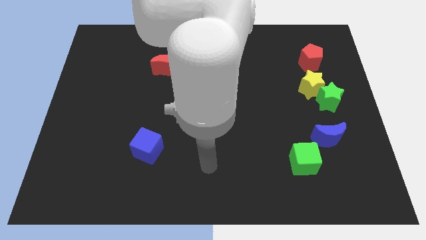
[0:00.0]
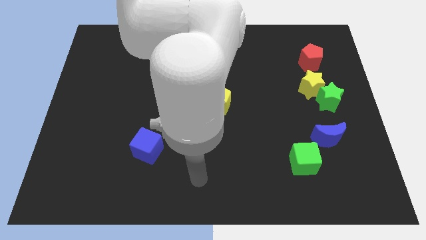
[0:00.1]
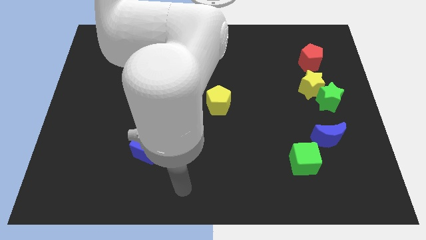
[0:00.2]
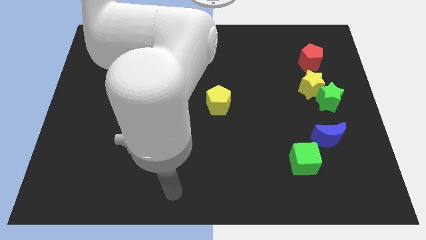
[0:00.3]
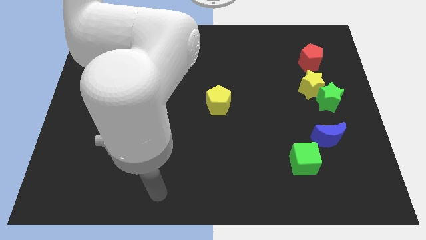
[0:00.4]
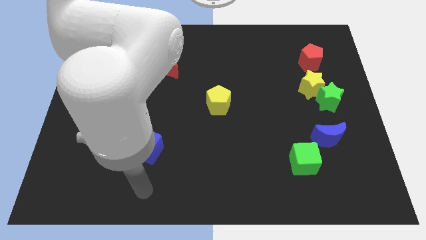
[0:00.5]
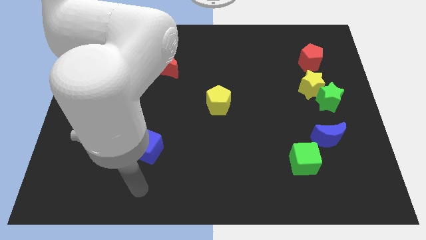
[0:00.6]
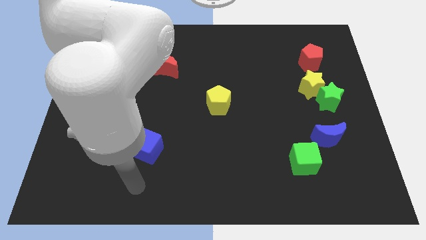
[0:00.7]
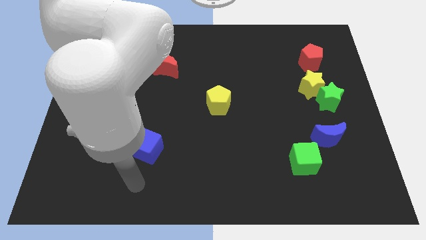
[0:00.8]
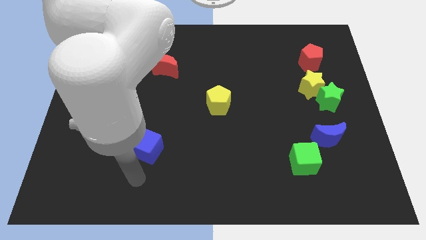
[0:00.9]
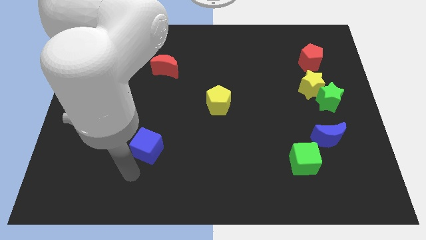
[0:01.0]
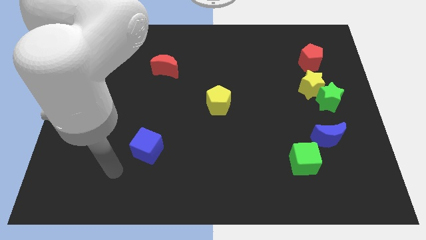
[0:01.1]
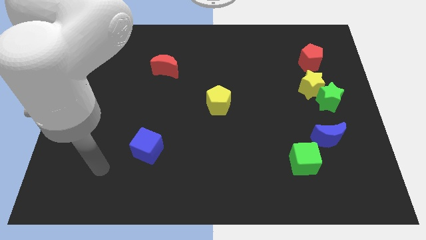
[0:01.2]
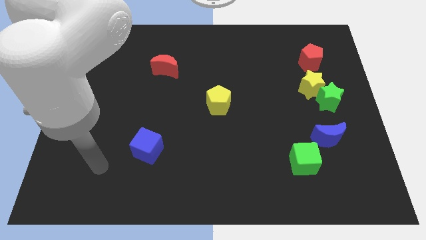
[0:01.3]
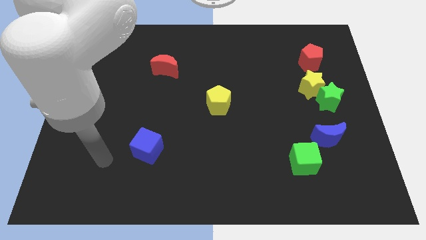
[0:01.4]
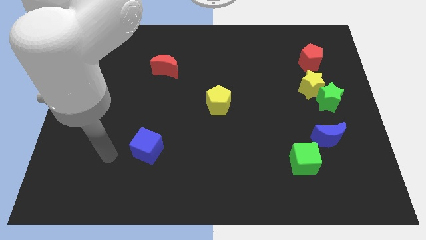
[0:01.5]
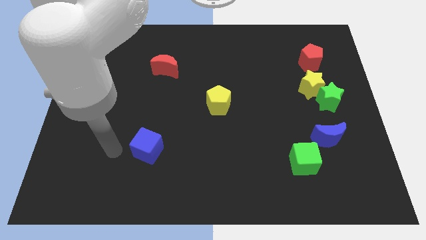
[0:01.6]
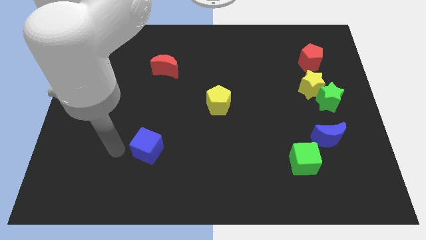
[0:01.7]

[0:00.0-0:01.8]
move your arm left to the blue cube

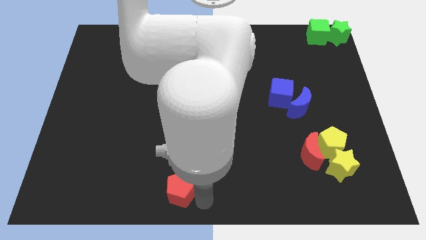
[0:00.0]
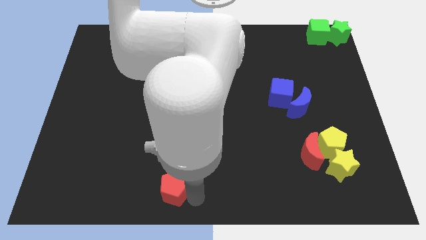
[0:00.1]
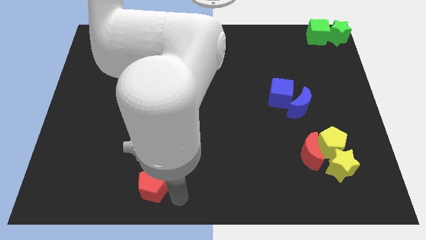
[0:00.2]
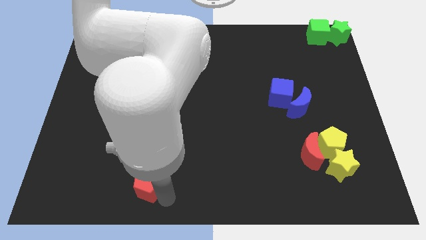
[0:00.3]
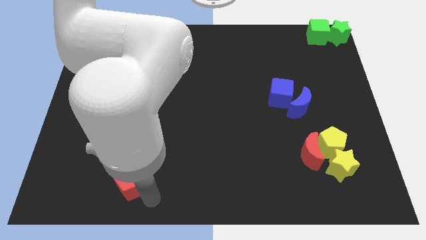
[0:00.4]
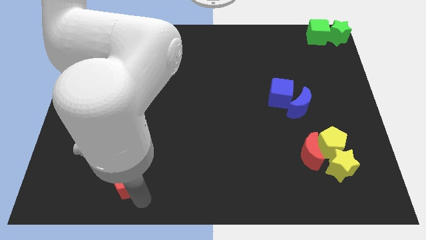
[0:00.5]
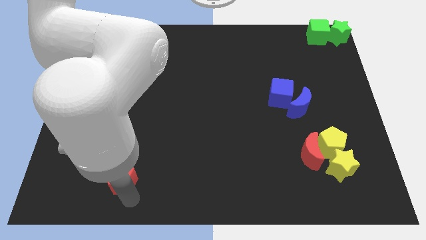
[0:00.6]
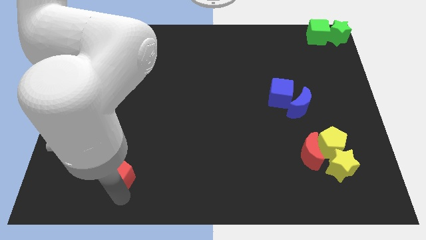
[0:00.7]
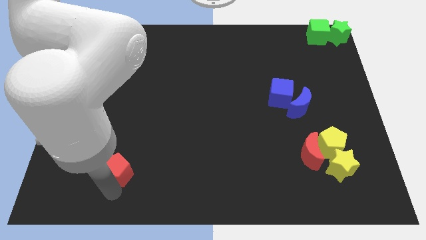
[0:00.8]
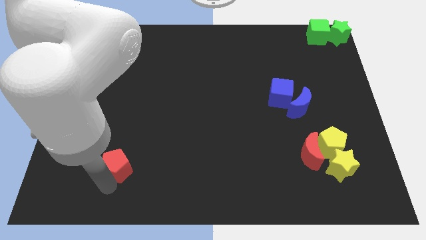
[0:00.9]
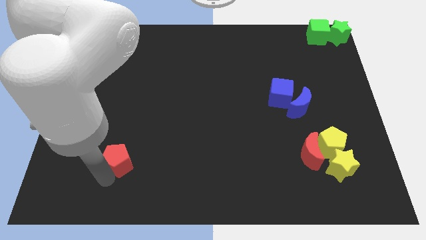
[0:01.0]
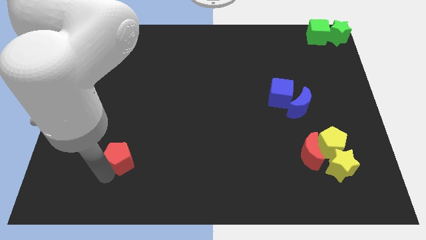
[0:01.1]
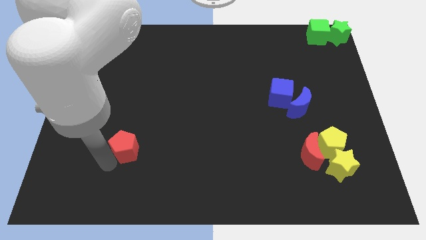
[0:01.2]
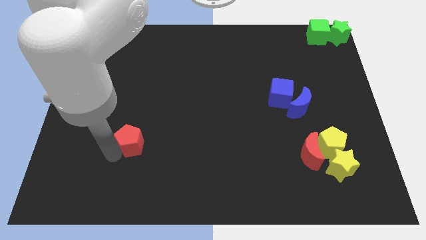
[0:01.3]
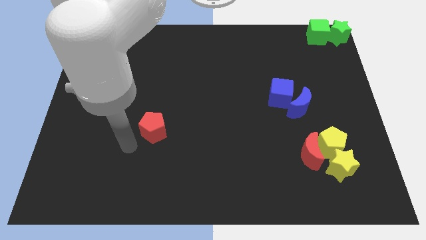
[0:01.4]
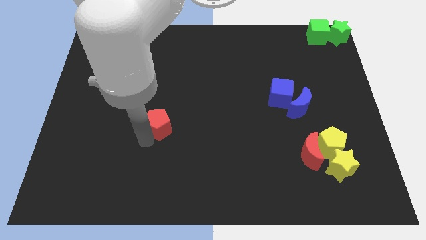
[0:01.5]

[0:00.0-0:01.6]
push the red pentagon to the top

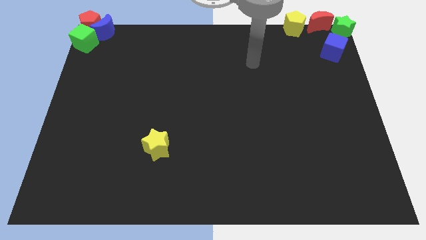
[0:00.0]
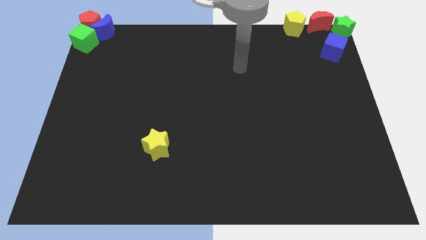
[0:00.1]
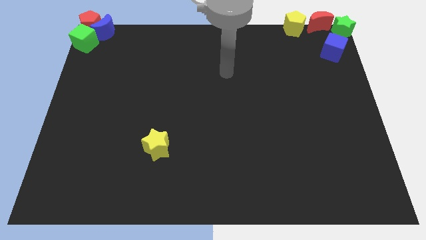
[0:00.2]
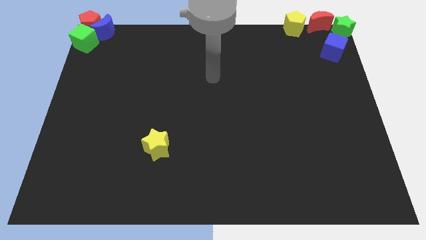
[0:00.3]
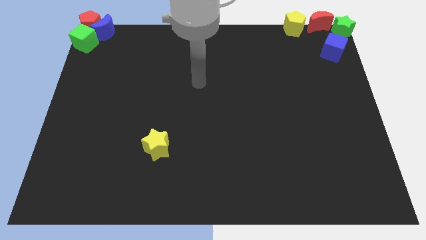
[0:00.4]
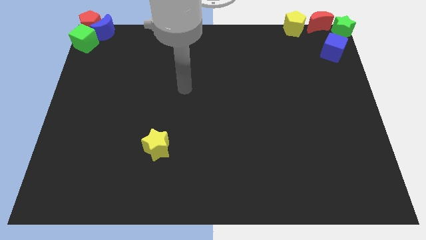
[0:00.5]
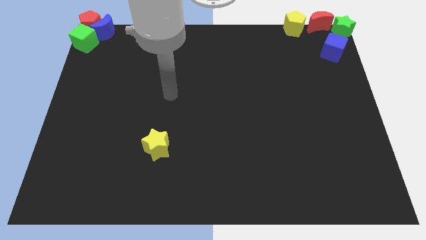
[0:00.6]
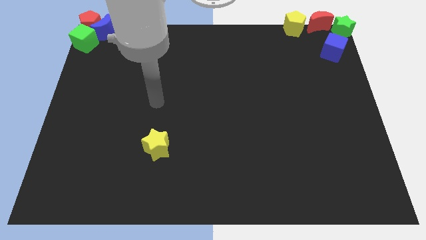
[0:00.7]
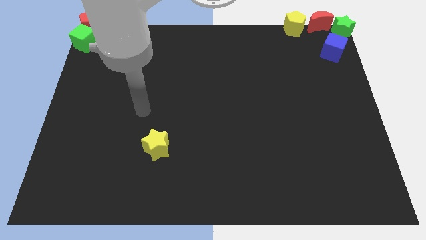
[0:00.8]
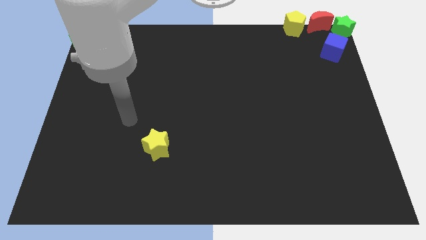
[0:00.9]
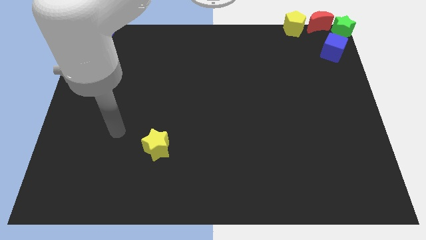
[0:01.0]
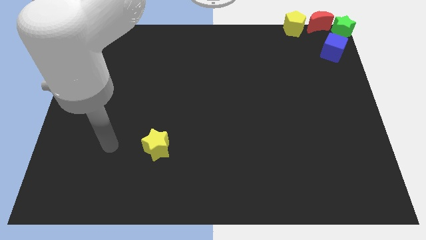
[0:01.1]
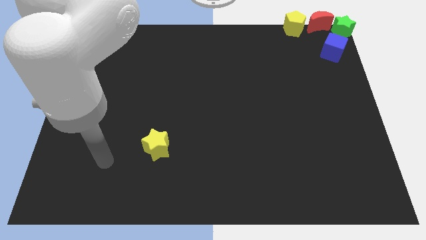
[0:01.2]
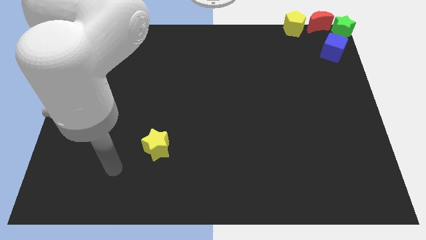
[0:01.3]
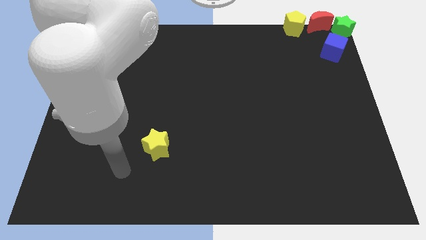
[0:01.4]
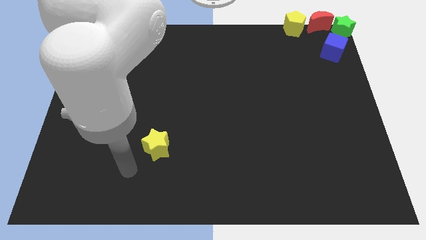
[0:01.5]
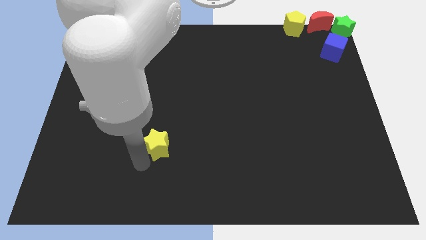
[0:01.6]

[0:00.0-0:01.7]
move the arm at the bottom left of the yellow star

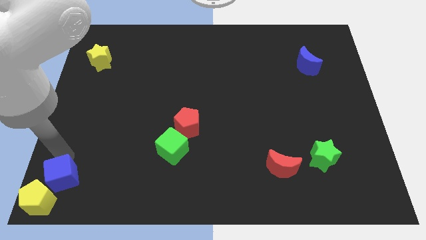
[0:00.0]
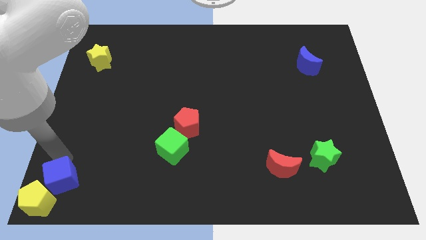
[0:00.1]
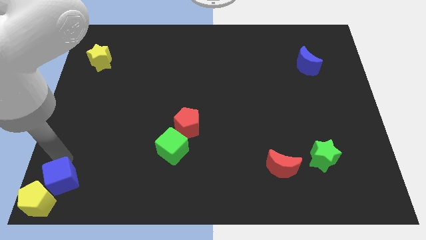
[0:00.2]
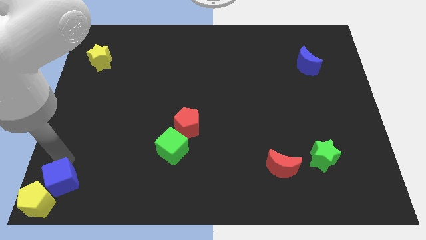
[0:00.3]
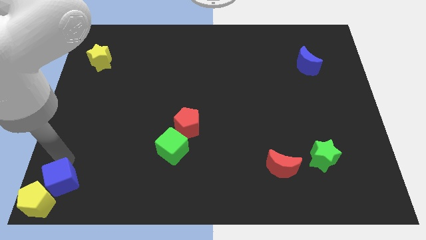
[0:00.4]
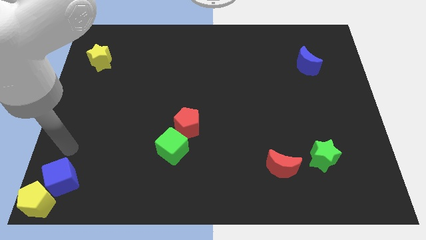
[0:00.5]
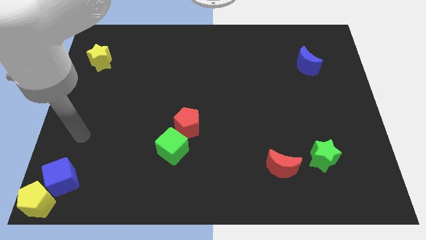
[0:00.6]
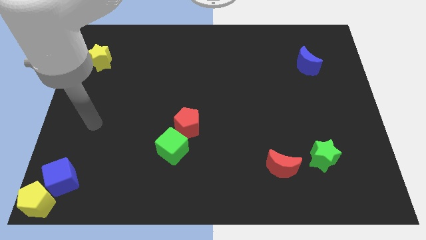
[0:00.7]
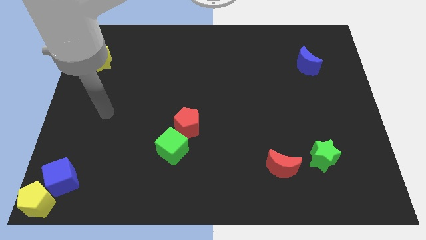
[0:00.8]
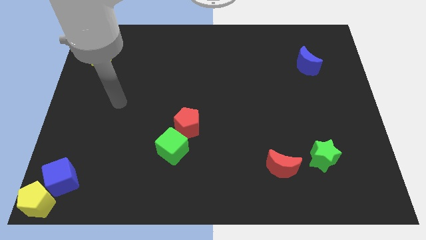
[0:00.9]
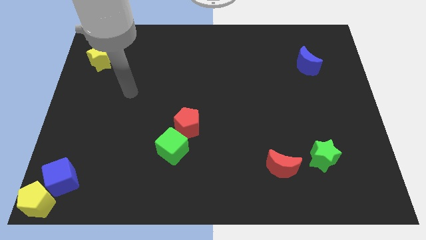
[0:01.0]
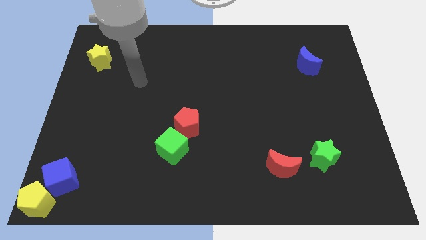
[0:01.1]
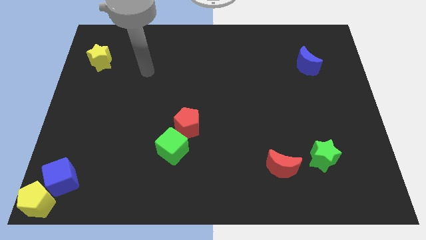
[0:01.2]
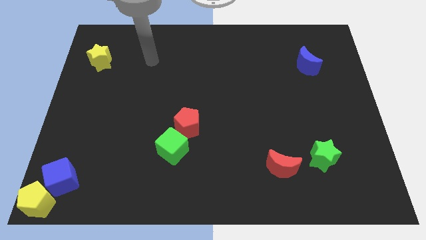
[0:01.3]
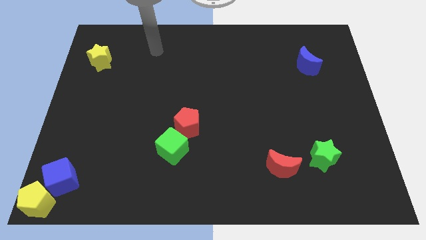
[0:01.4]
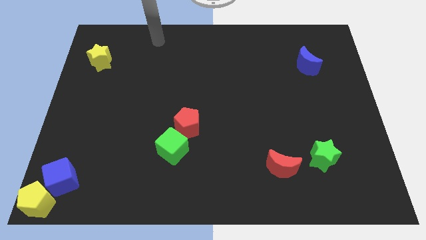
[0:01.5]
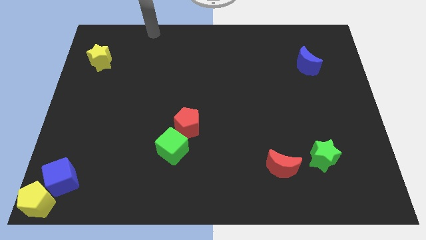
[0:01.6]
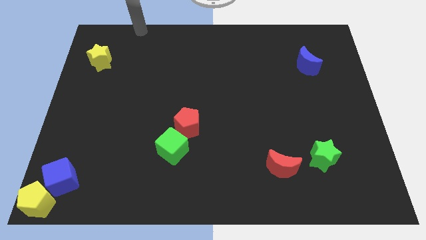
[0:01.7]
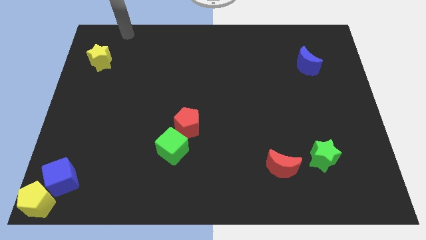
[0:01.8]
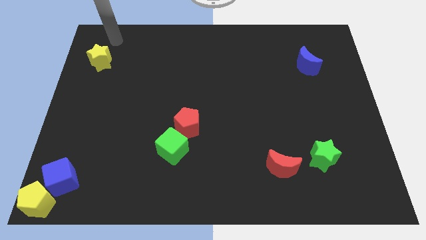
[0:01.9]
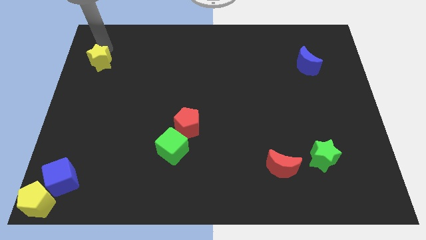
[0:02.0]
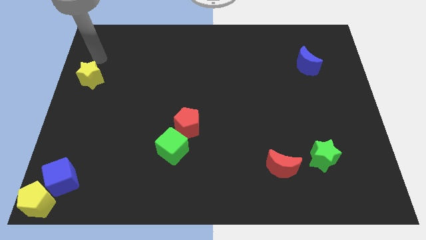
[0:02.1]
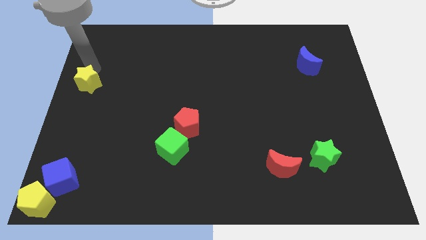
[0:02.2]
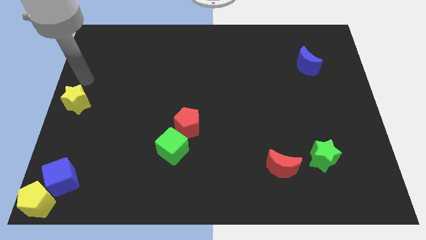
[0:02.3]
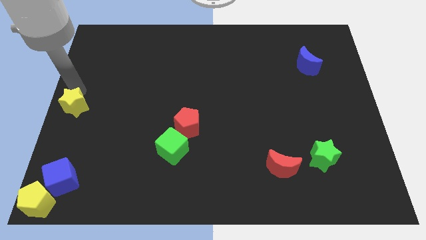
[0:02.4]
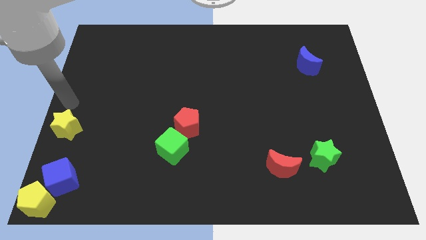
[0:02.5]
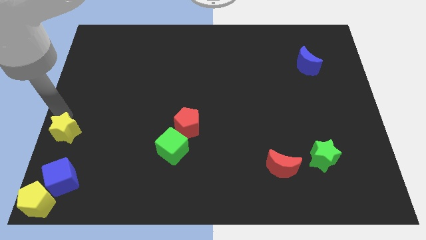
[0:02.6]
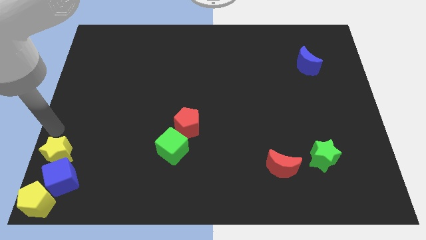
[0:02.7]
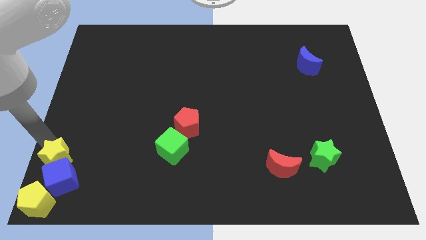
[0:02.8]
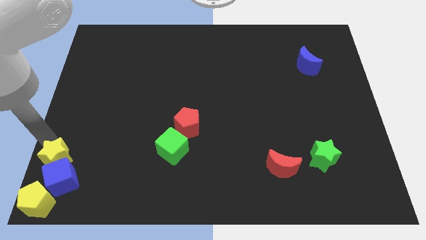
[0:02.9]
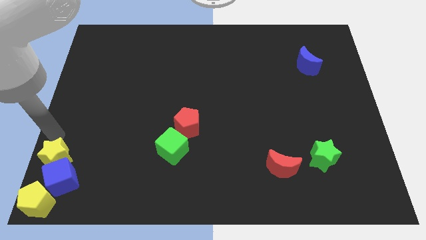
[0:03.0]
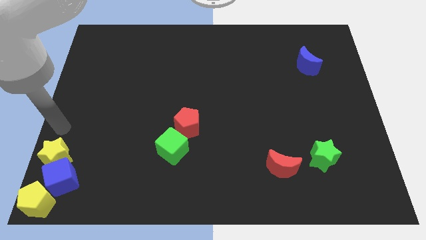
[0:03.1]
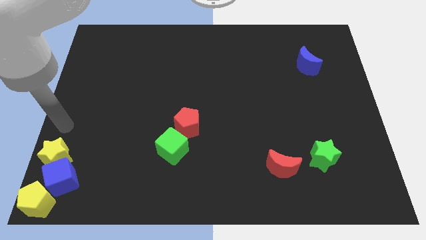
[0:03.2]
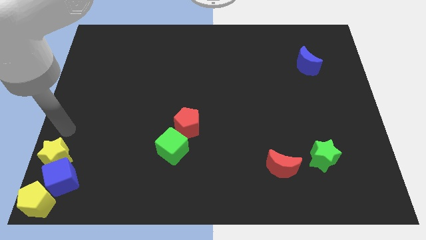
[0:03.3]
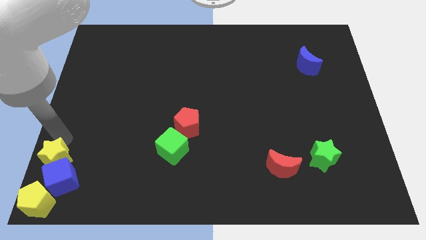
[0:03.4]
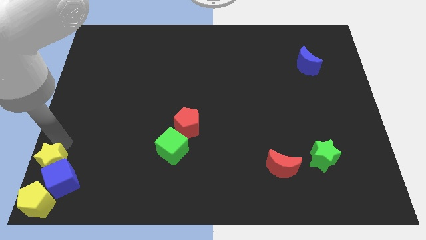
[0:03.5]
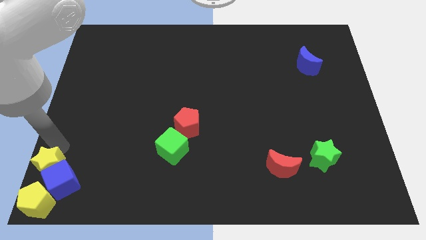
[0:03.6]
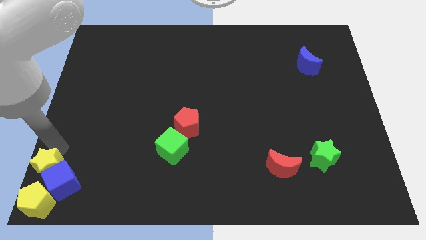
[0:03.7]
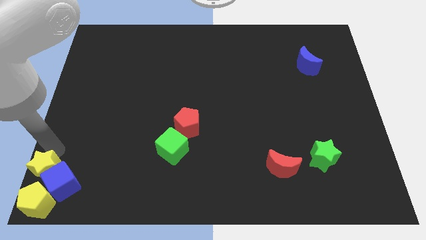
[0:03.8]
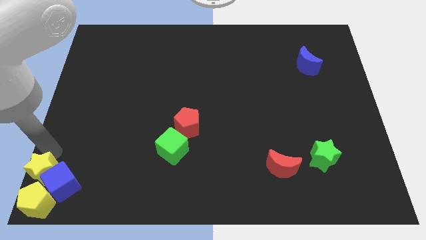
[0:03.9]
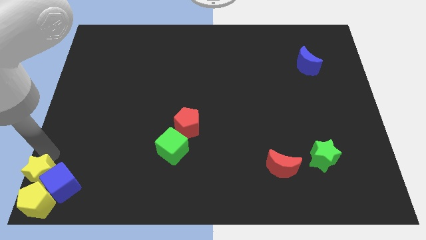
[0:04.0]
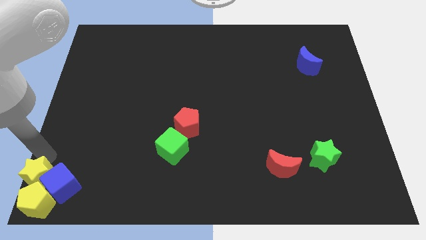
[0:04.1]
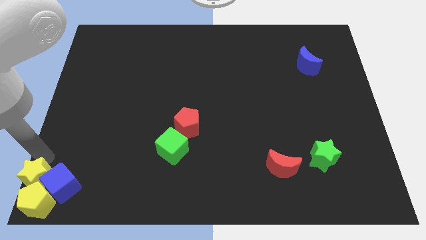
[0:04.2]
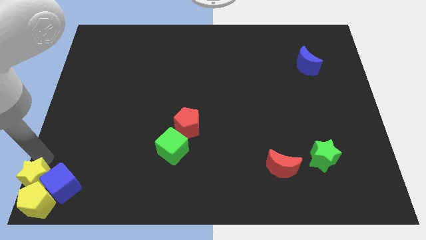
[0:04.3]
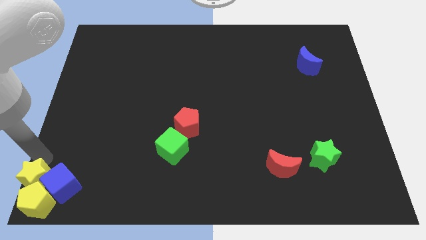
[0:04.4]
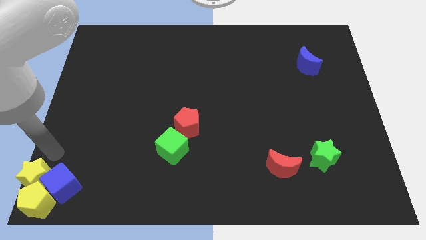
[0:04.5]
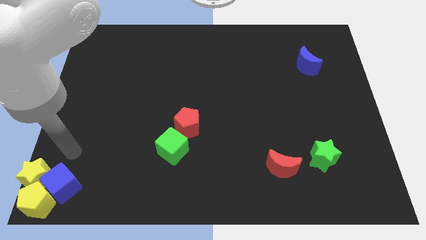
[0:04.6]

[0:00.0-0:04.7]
place the yellow star into the yellow pentagon and blue cube
